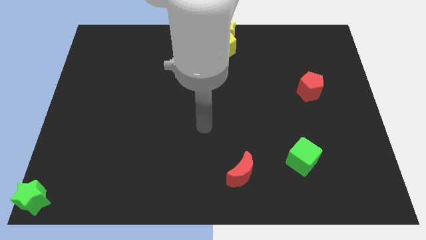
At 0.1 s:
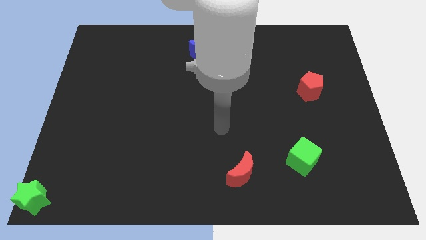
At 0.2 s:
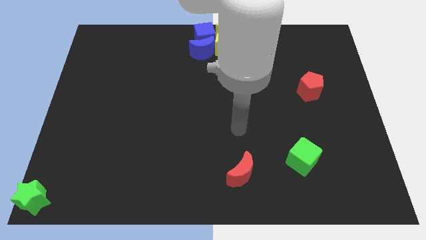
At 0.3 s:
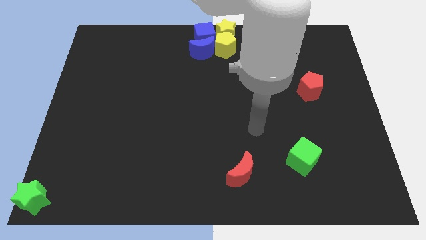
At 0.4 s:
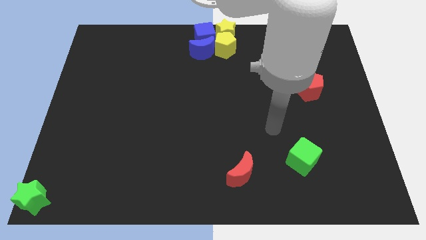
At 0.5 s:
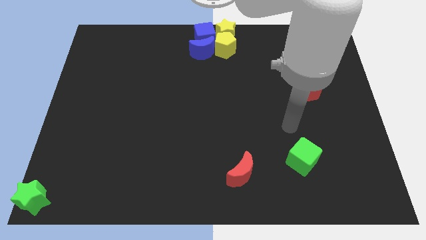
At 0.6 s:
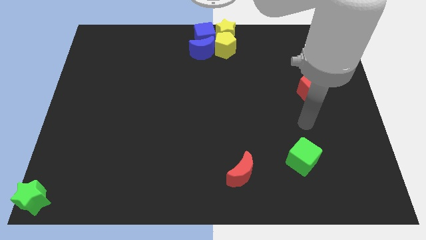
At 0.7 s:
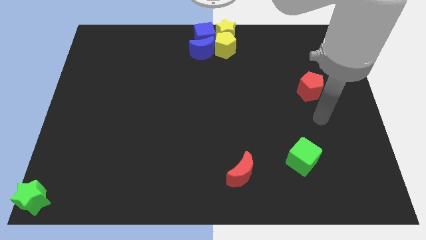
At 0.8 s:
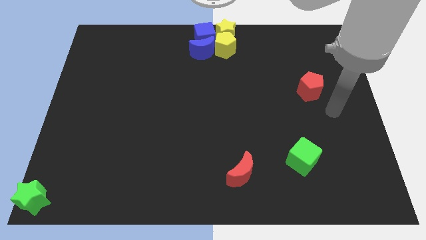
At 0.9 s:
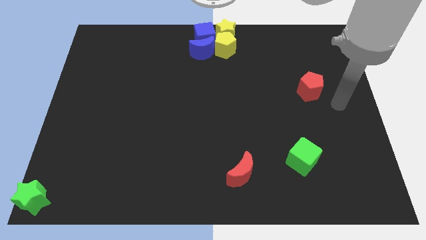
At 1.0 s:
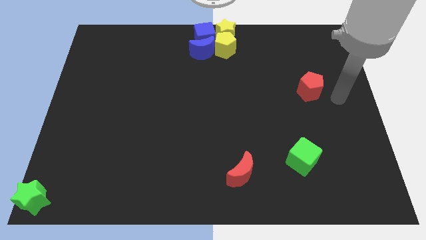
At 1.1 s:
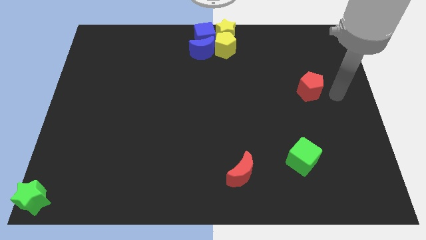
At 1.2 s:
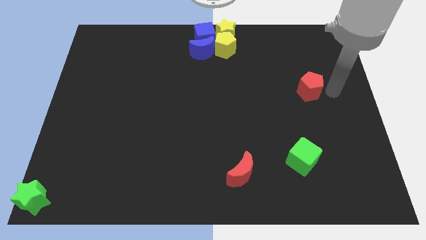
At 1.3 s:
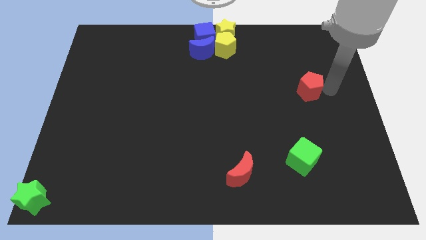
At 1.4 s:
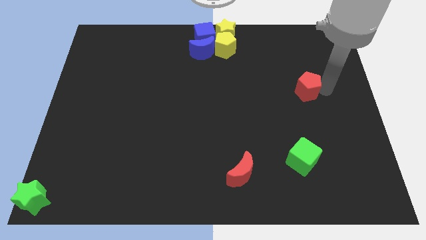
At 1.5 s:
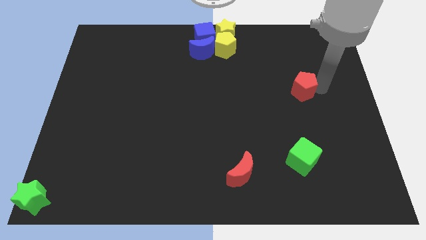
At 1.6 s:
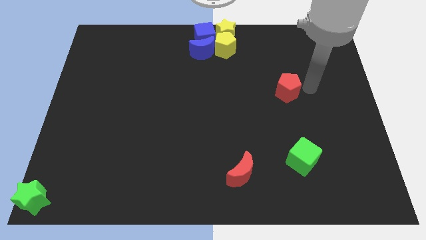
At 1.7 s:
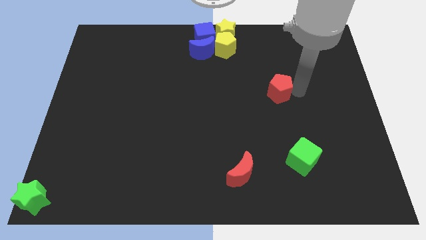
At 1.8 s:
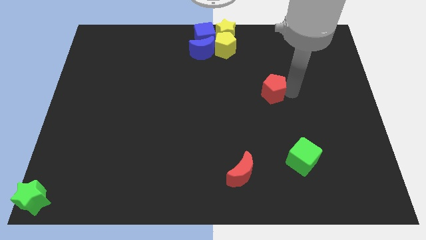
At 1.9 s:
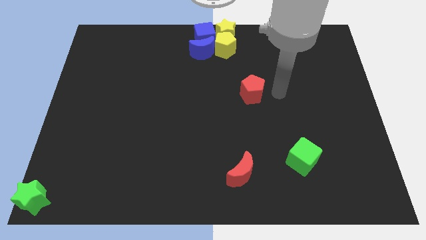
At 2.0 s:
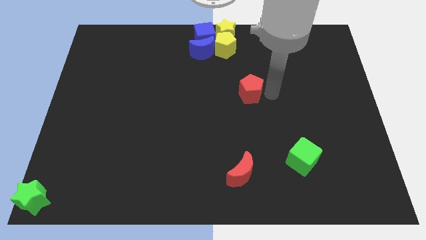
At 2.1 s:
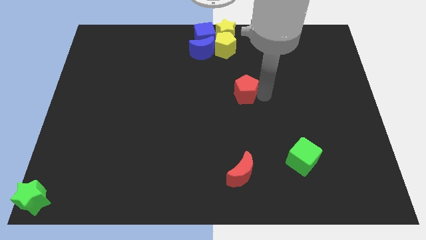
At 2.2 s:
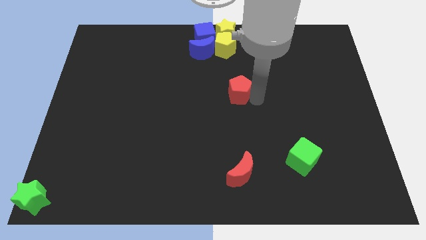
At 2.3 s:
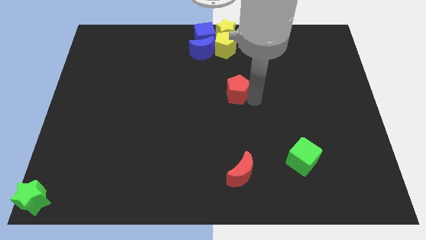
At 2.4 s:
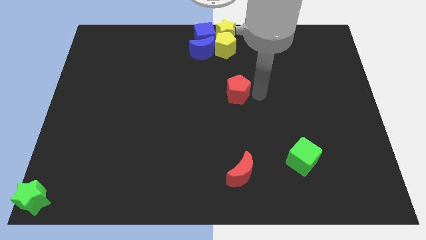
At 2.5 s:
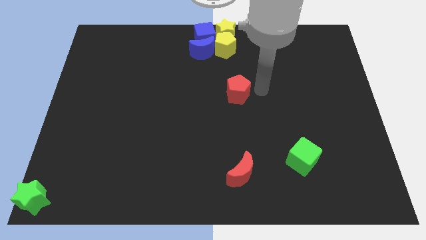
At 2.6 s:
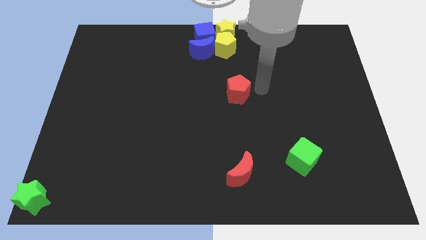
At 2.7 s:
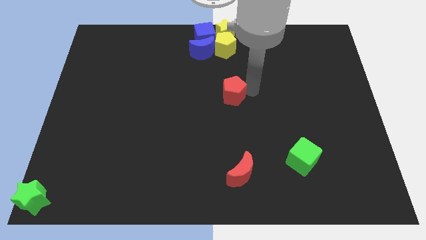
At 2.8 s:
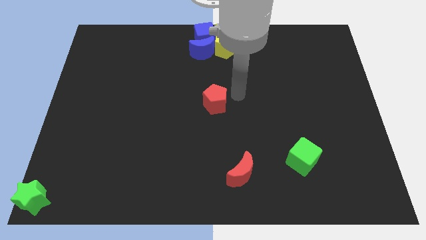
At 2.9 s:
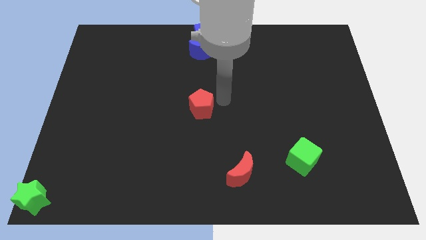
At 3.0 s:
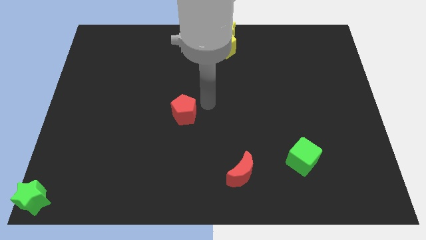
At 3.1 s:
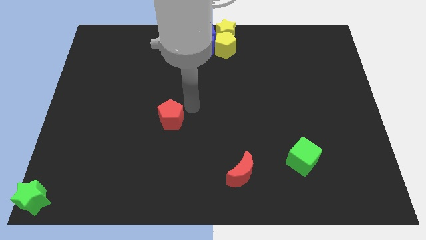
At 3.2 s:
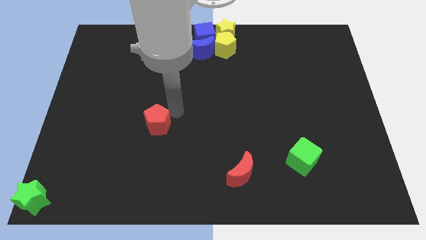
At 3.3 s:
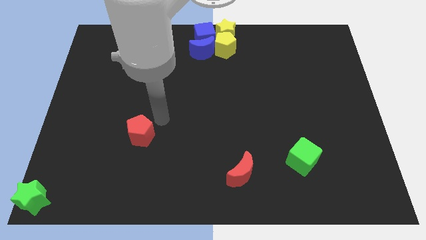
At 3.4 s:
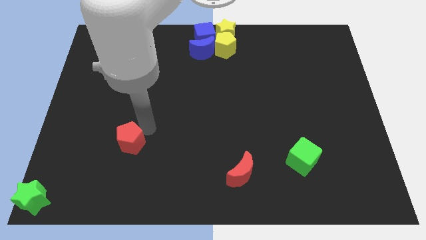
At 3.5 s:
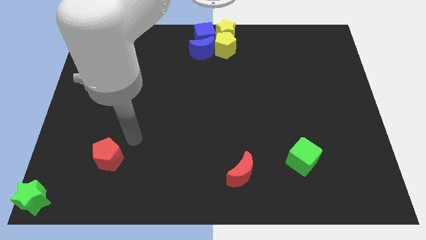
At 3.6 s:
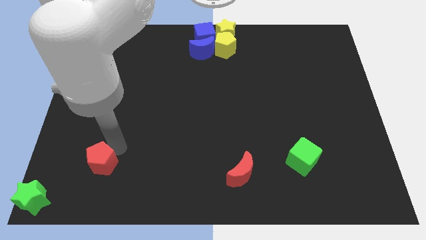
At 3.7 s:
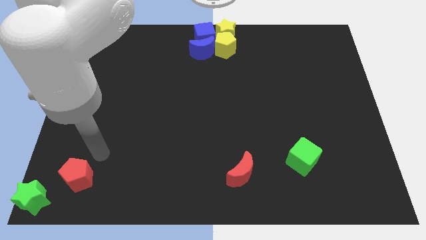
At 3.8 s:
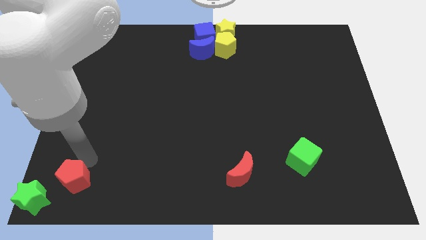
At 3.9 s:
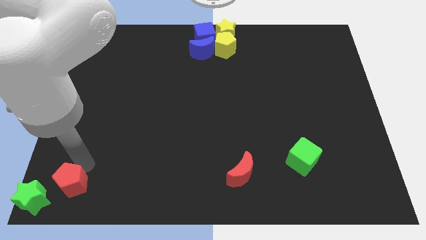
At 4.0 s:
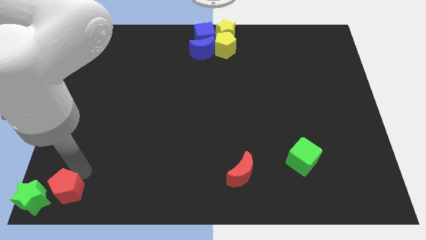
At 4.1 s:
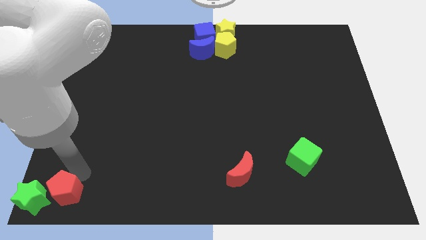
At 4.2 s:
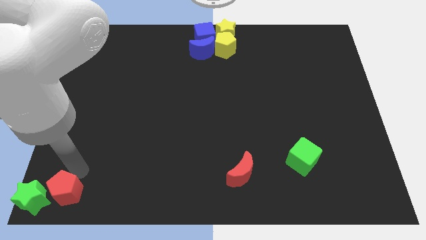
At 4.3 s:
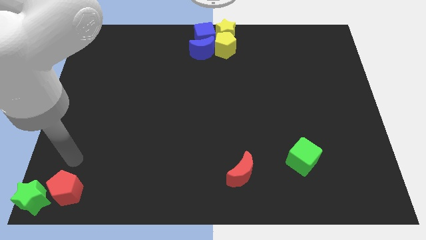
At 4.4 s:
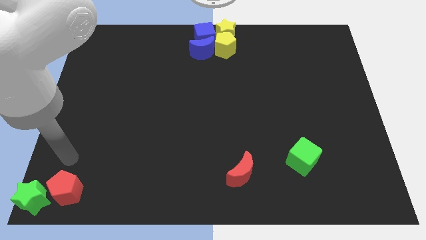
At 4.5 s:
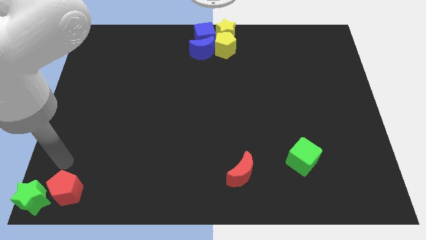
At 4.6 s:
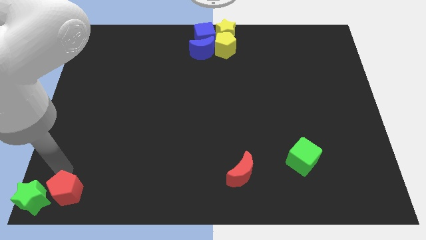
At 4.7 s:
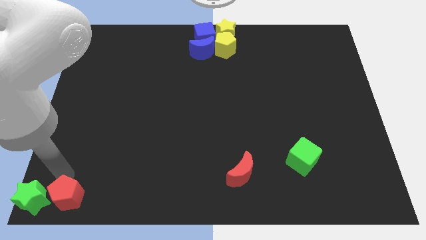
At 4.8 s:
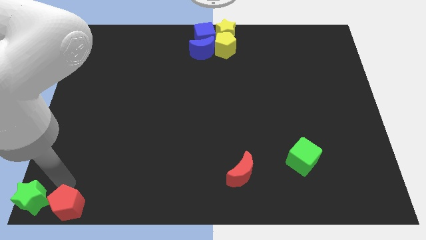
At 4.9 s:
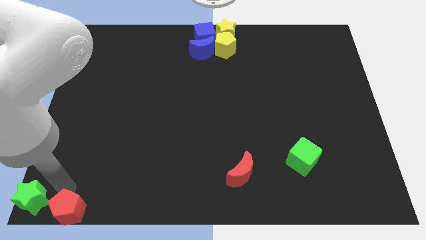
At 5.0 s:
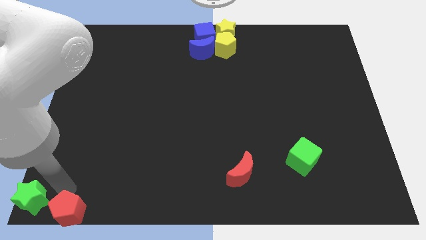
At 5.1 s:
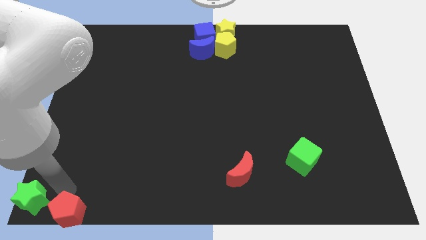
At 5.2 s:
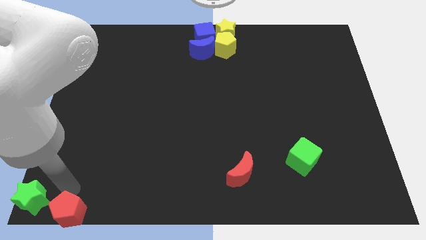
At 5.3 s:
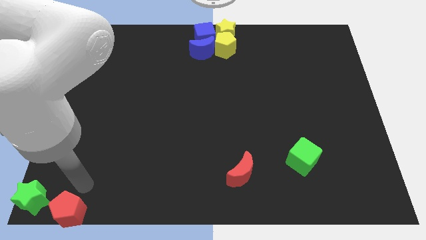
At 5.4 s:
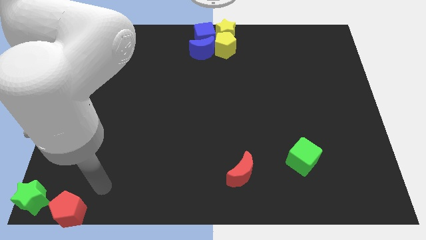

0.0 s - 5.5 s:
push the red pentagon to the bottom left corner of the board

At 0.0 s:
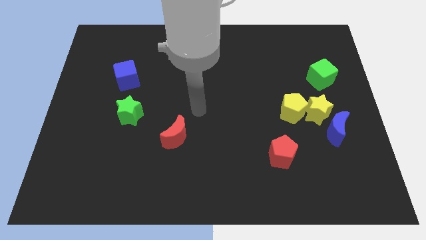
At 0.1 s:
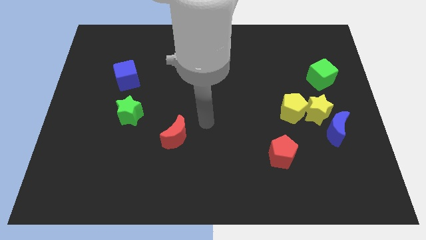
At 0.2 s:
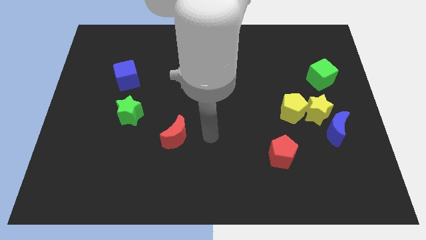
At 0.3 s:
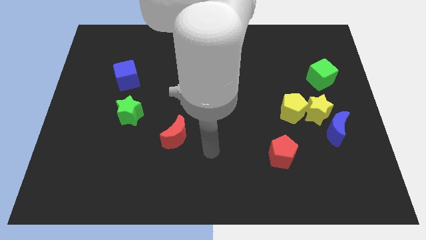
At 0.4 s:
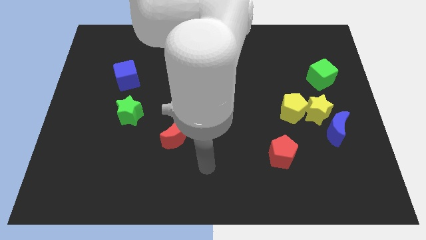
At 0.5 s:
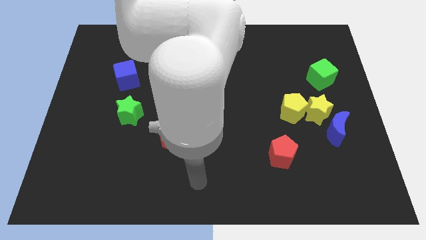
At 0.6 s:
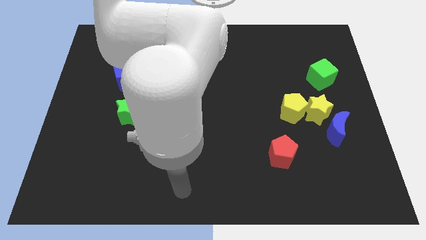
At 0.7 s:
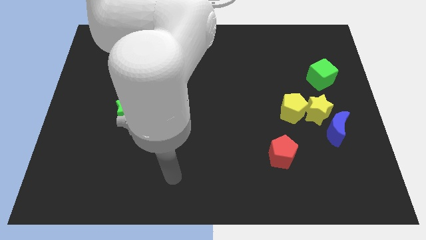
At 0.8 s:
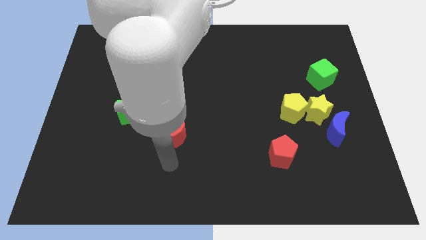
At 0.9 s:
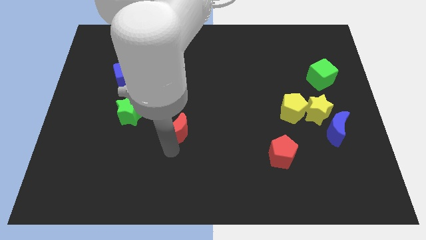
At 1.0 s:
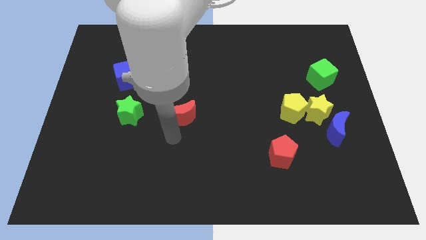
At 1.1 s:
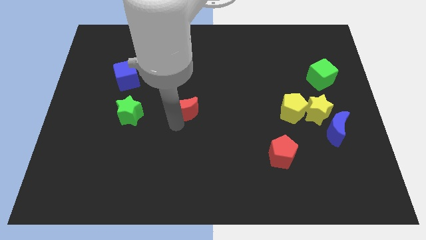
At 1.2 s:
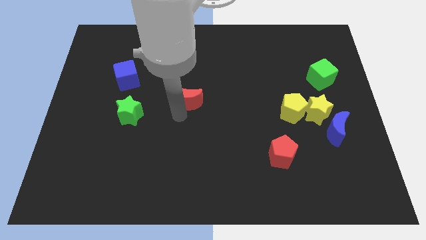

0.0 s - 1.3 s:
move red moon slightly up

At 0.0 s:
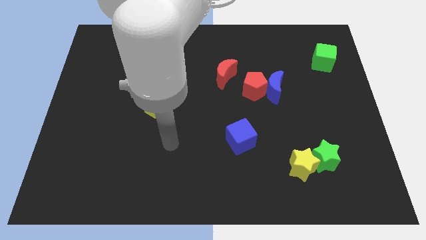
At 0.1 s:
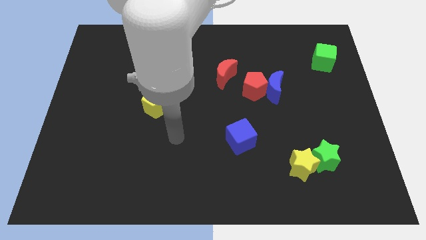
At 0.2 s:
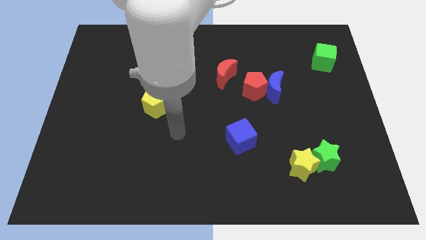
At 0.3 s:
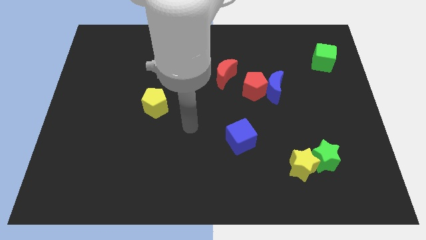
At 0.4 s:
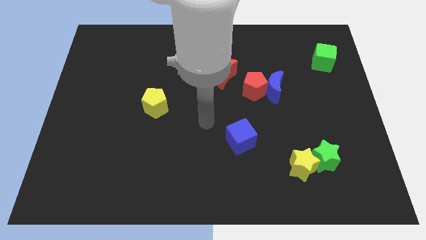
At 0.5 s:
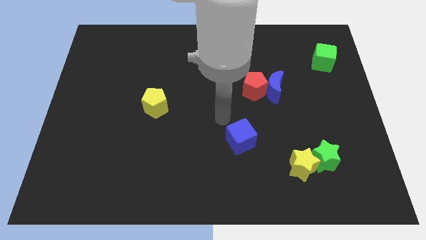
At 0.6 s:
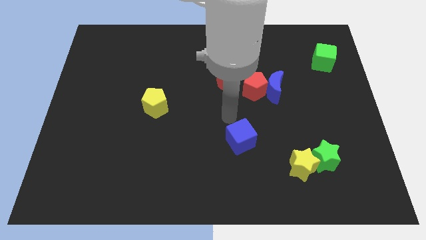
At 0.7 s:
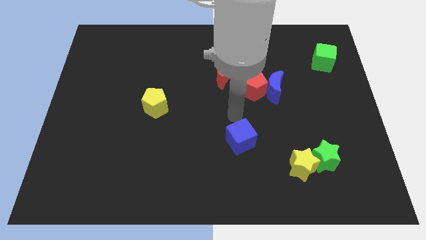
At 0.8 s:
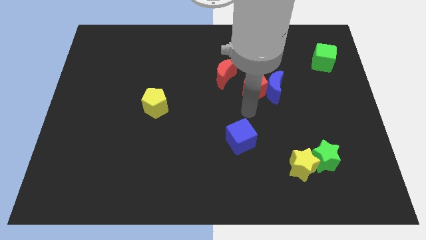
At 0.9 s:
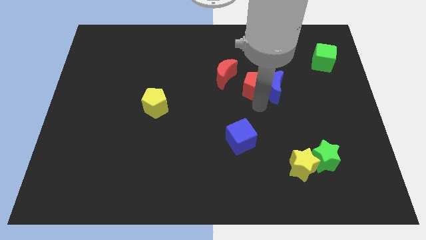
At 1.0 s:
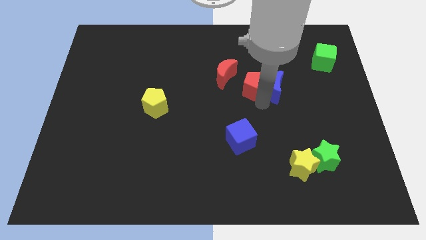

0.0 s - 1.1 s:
move your arm towards the red pentagon

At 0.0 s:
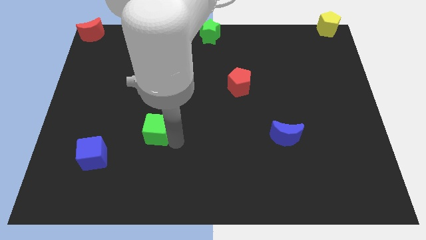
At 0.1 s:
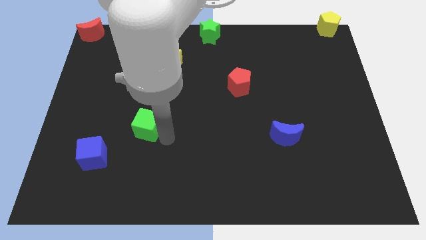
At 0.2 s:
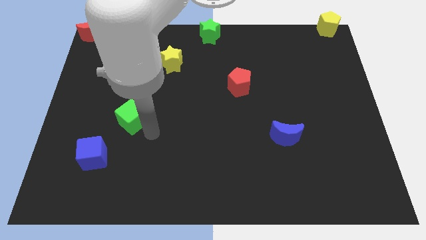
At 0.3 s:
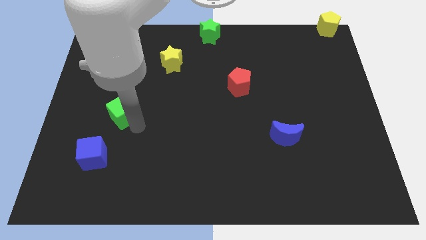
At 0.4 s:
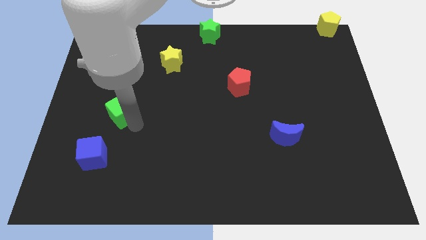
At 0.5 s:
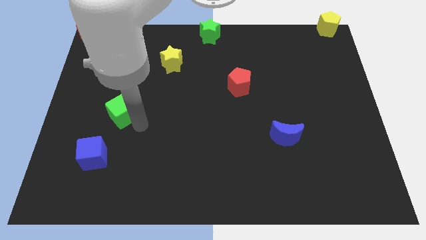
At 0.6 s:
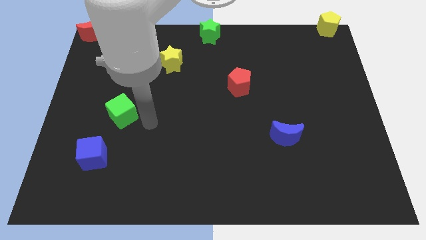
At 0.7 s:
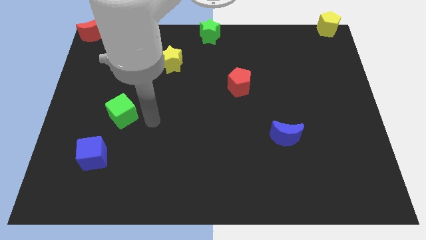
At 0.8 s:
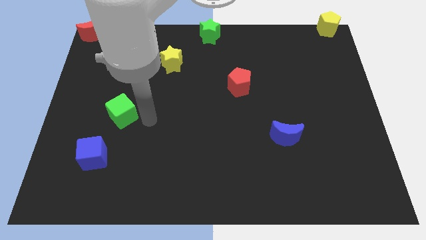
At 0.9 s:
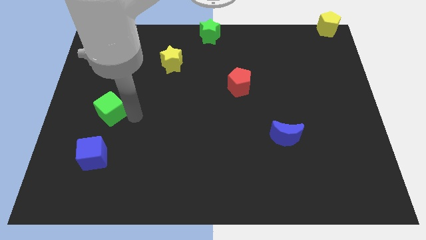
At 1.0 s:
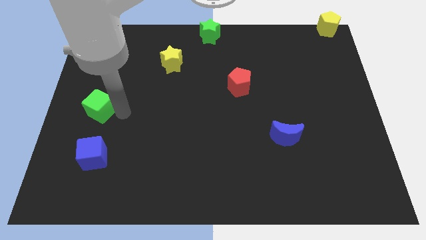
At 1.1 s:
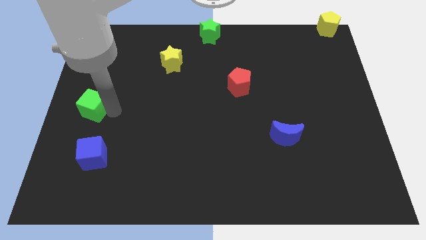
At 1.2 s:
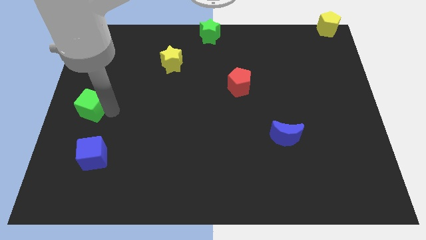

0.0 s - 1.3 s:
move the green cube above the blue cube
